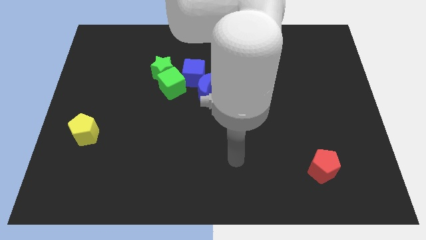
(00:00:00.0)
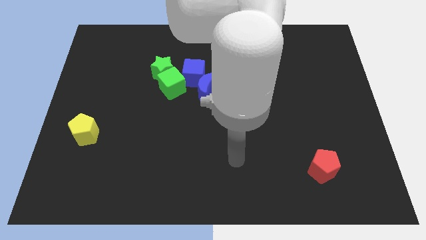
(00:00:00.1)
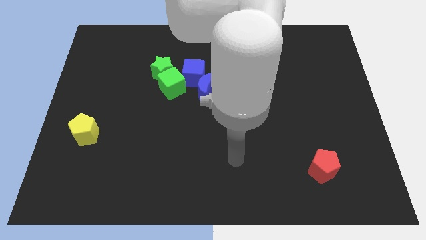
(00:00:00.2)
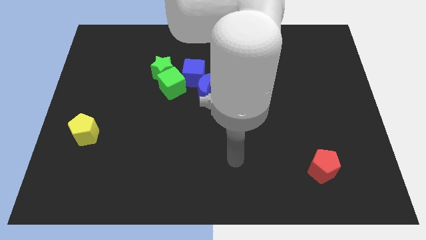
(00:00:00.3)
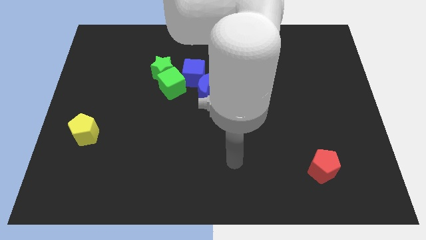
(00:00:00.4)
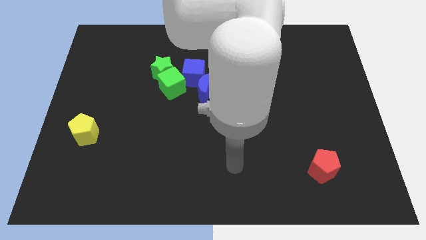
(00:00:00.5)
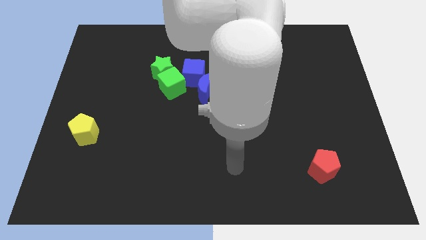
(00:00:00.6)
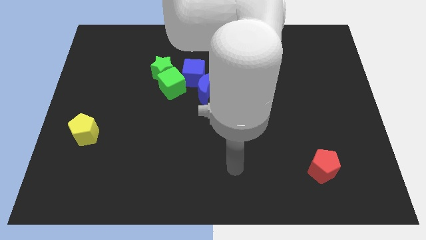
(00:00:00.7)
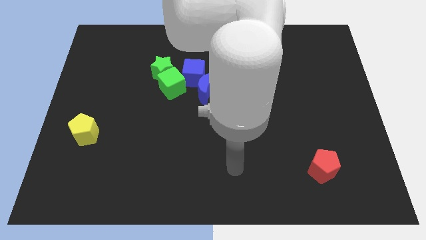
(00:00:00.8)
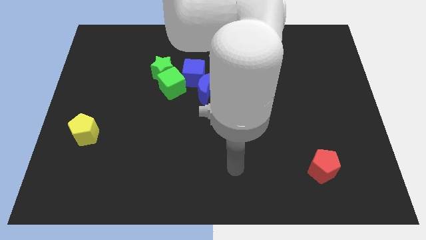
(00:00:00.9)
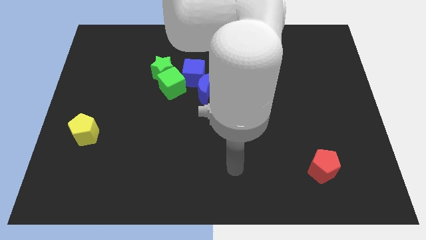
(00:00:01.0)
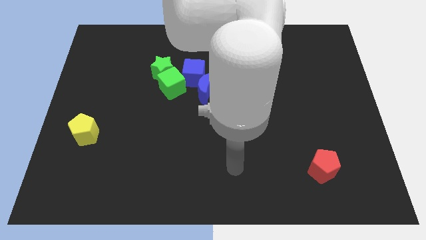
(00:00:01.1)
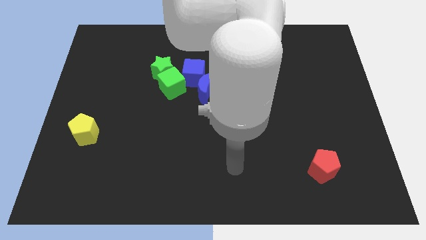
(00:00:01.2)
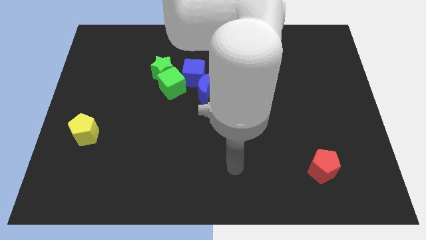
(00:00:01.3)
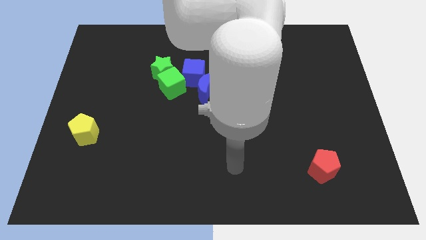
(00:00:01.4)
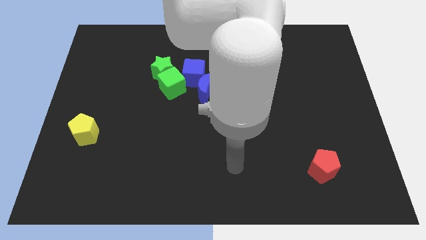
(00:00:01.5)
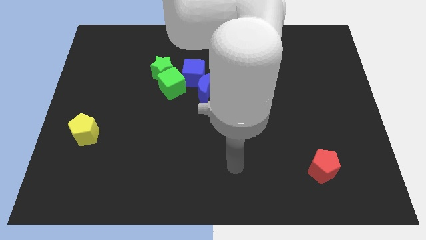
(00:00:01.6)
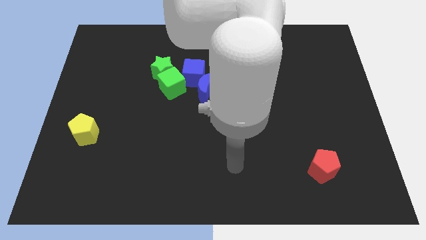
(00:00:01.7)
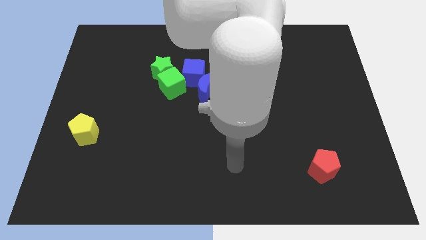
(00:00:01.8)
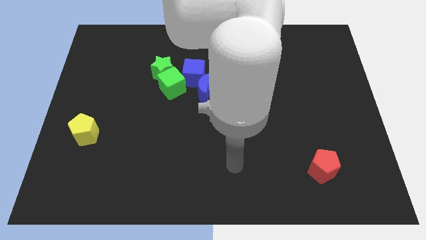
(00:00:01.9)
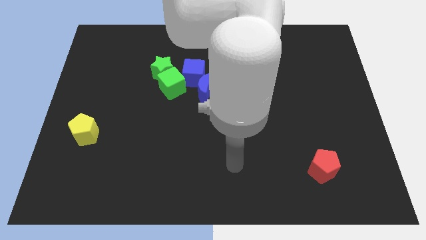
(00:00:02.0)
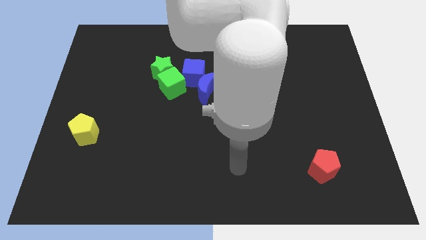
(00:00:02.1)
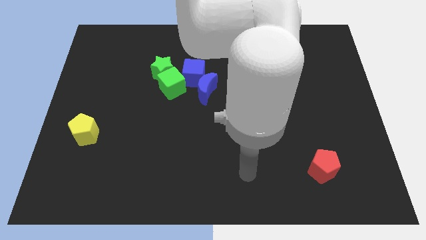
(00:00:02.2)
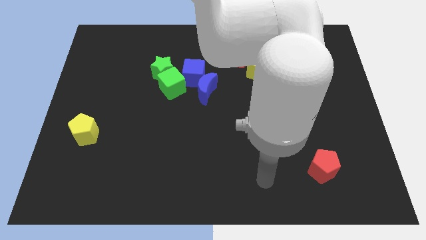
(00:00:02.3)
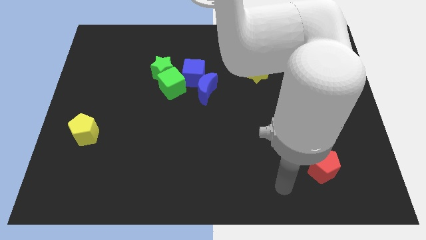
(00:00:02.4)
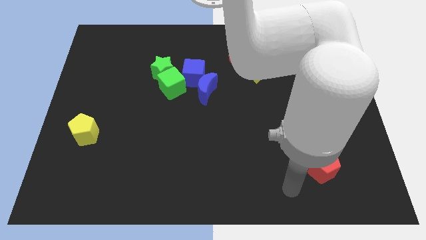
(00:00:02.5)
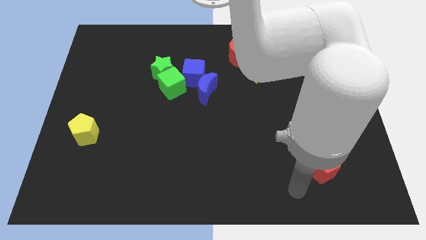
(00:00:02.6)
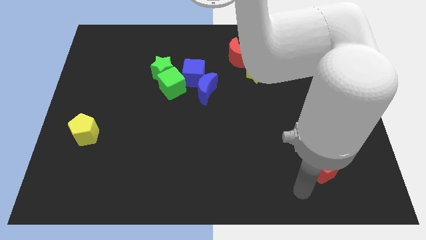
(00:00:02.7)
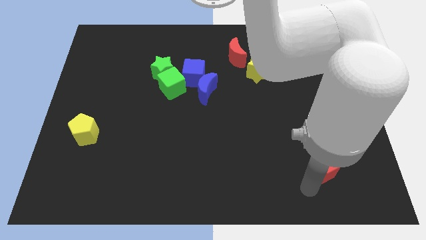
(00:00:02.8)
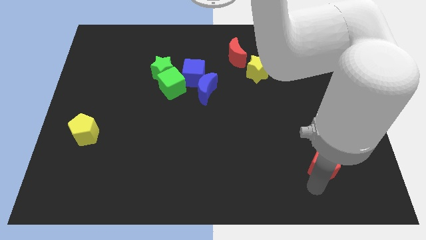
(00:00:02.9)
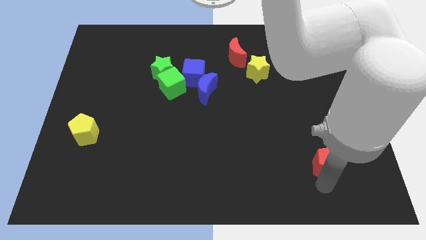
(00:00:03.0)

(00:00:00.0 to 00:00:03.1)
place your hand below red pentagon

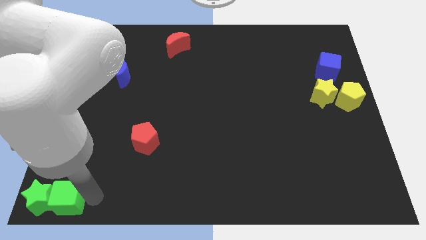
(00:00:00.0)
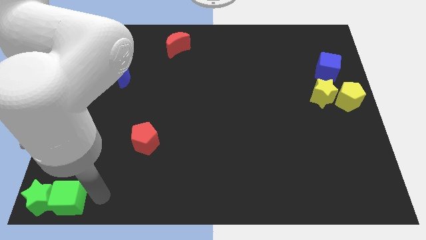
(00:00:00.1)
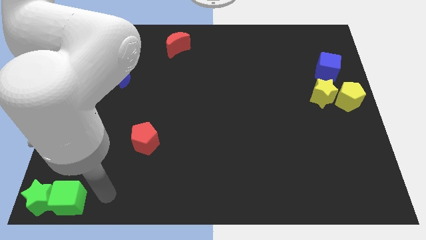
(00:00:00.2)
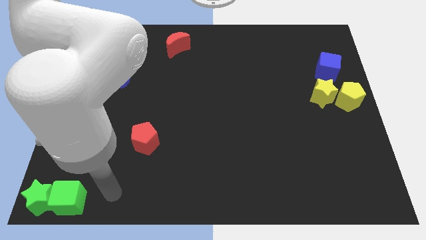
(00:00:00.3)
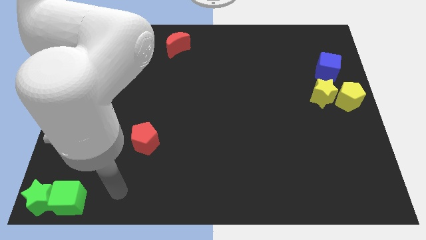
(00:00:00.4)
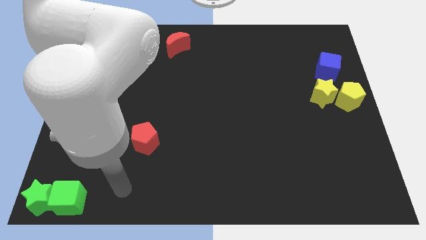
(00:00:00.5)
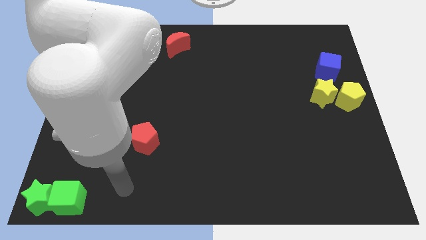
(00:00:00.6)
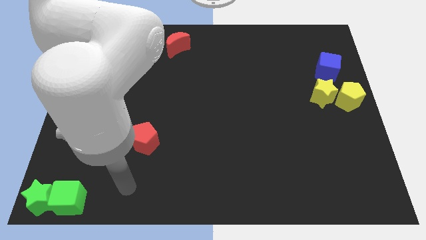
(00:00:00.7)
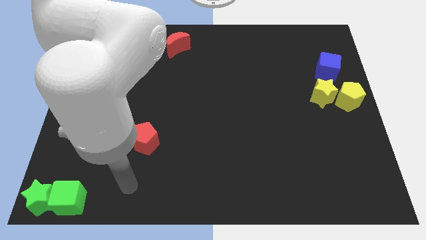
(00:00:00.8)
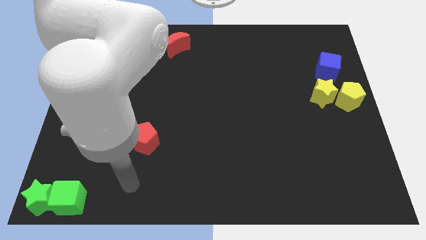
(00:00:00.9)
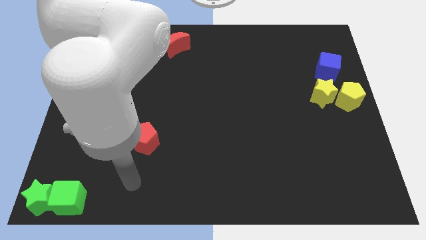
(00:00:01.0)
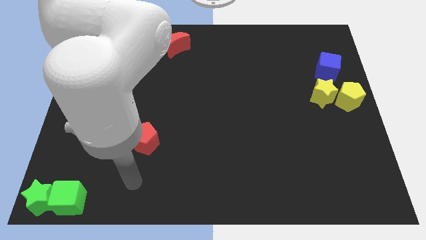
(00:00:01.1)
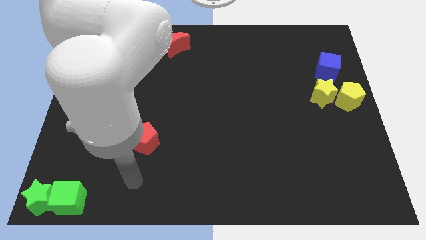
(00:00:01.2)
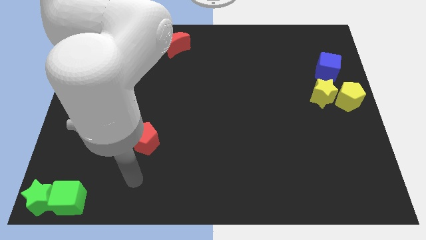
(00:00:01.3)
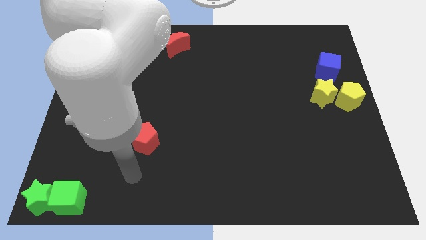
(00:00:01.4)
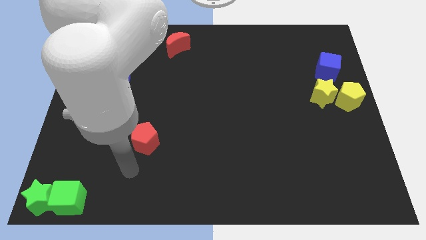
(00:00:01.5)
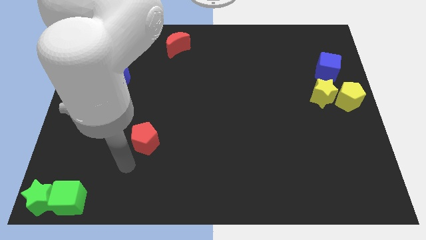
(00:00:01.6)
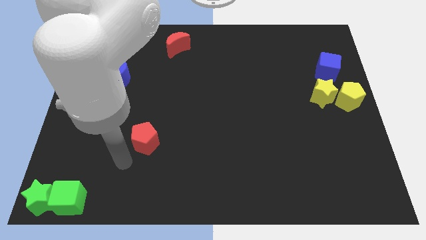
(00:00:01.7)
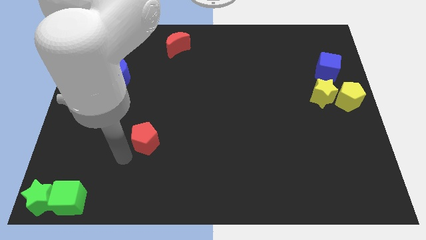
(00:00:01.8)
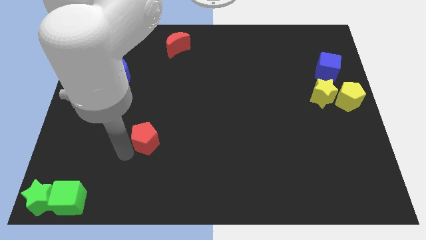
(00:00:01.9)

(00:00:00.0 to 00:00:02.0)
move your hand towards the red pentagon

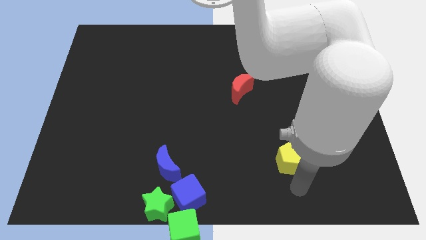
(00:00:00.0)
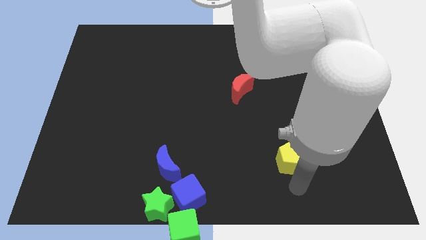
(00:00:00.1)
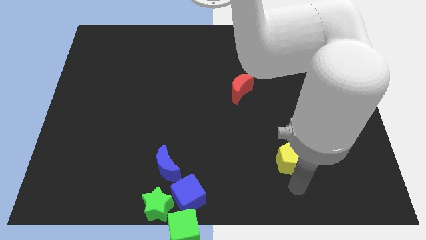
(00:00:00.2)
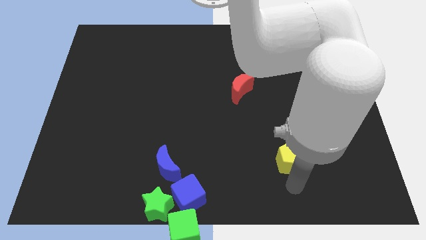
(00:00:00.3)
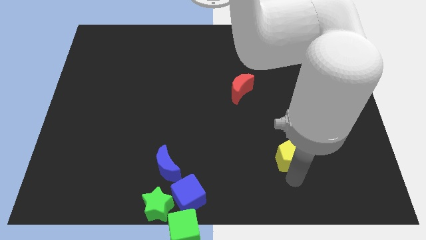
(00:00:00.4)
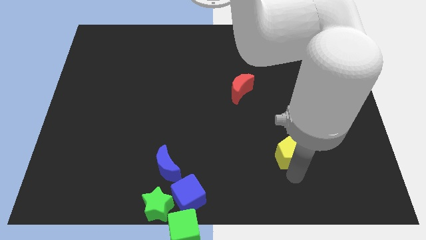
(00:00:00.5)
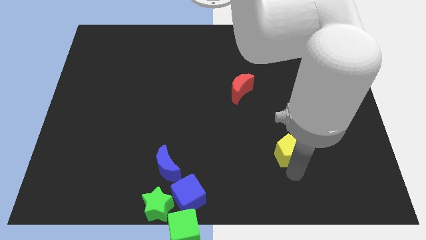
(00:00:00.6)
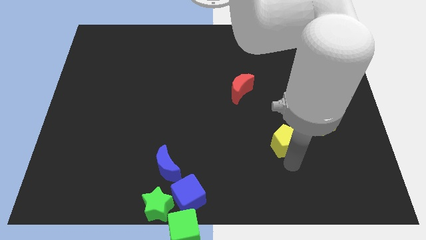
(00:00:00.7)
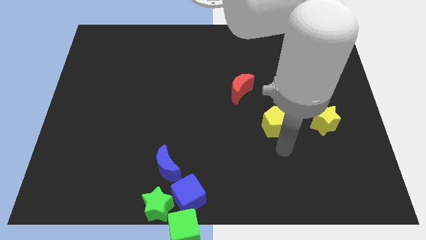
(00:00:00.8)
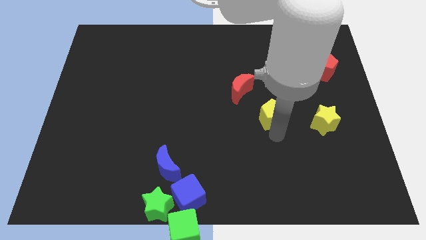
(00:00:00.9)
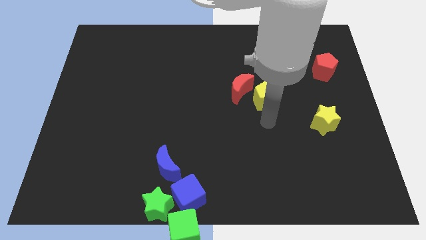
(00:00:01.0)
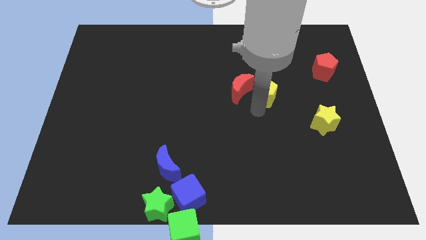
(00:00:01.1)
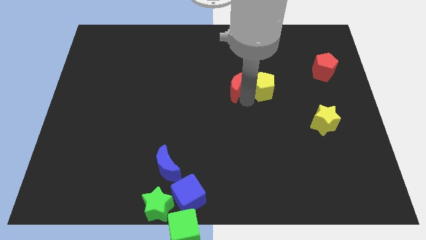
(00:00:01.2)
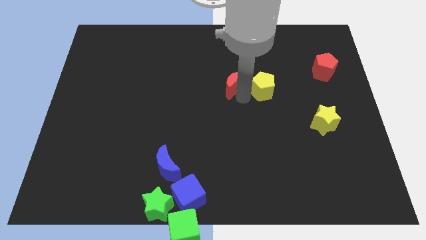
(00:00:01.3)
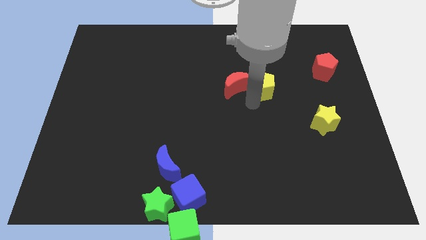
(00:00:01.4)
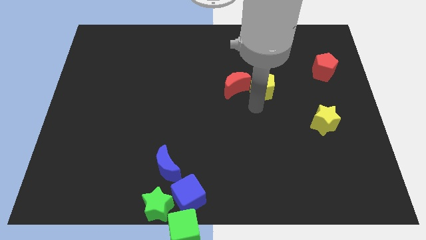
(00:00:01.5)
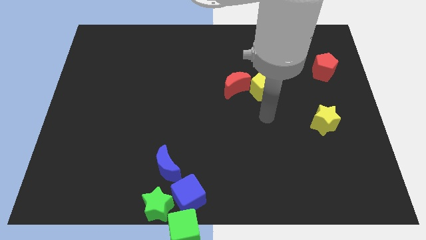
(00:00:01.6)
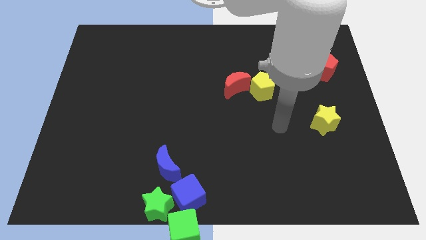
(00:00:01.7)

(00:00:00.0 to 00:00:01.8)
push the yellow pentagon into the red moon

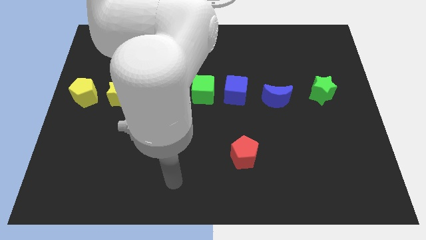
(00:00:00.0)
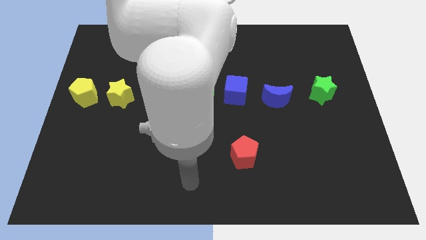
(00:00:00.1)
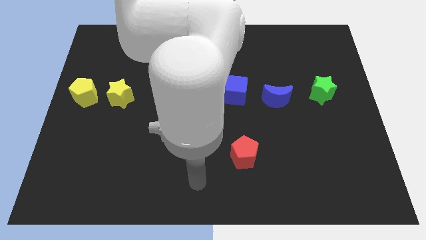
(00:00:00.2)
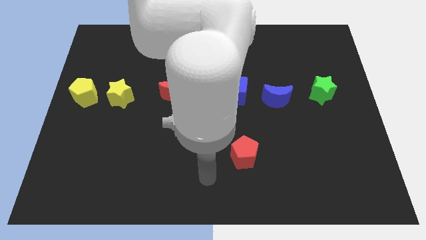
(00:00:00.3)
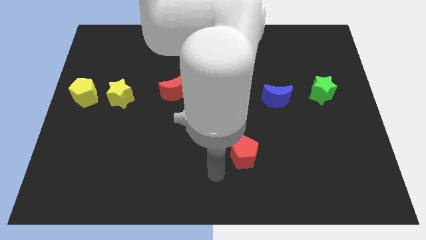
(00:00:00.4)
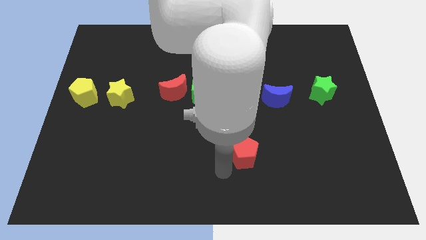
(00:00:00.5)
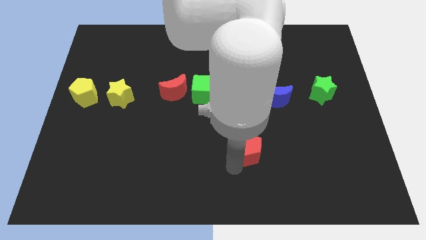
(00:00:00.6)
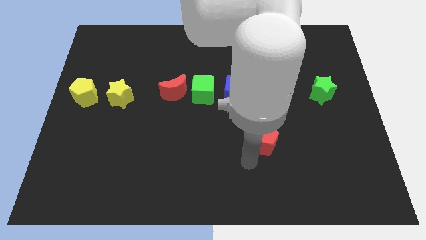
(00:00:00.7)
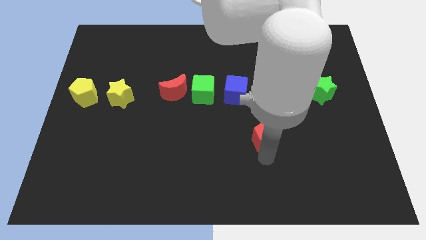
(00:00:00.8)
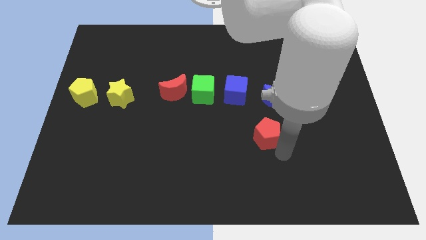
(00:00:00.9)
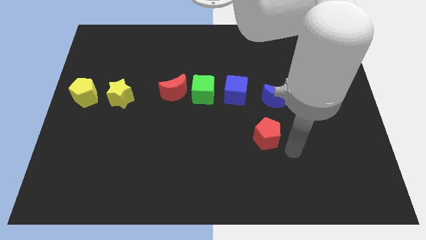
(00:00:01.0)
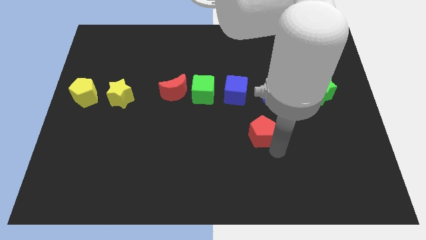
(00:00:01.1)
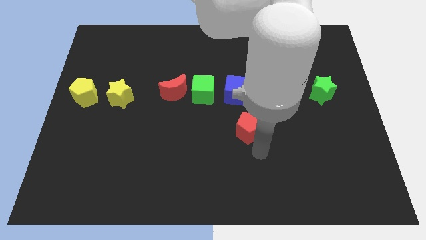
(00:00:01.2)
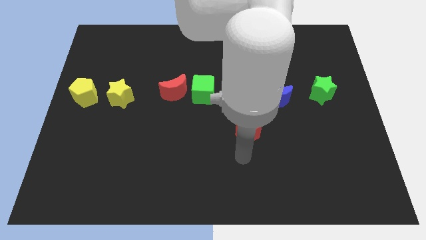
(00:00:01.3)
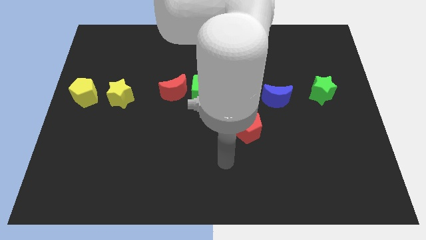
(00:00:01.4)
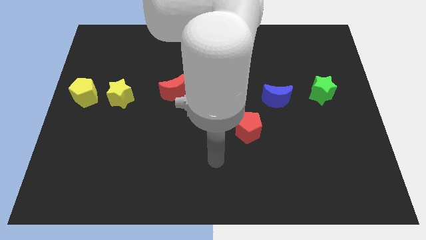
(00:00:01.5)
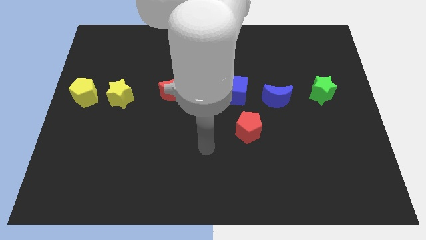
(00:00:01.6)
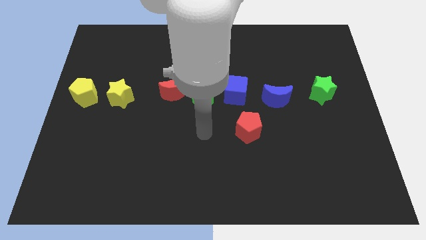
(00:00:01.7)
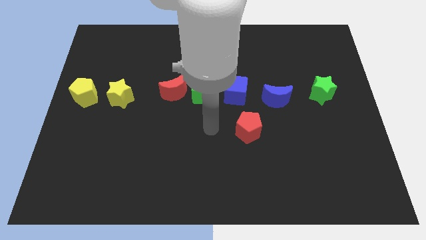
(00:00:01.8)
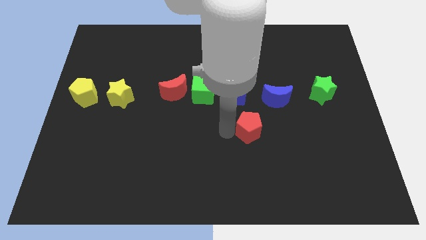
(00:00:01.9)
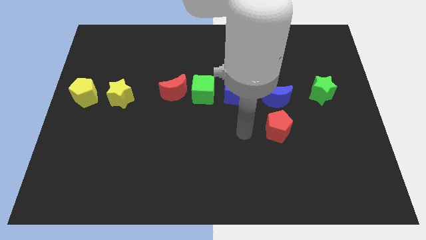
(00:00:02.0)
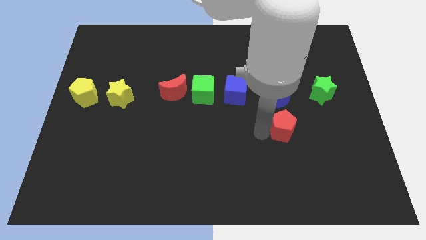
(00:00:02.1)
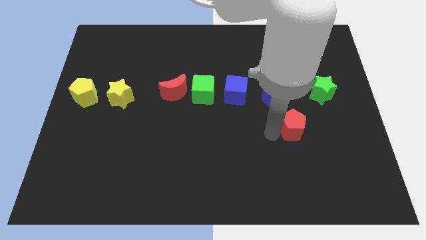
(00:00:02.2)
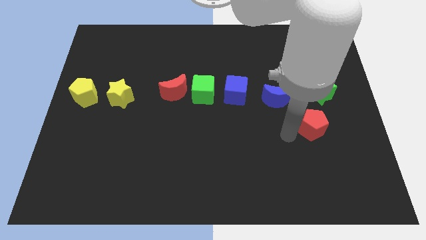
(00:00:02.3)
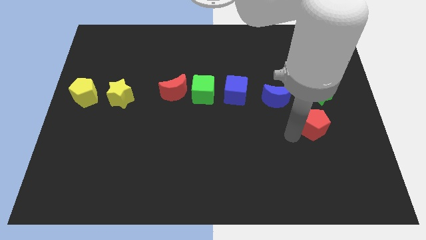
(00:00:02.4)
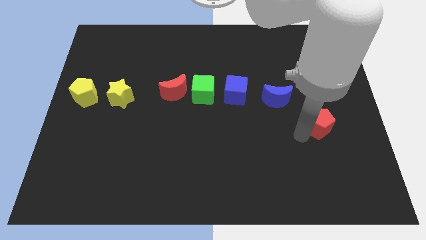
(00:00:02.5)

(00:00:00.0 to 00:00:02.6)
place the red pentagon down to the green star
